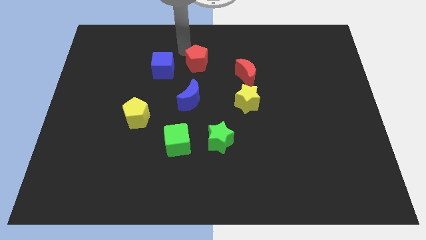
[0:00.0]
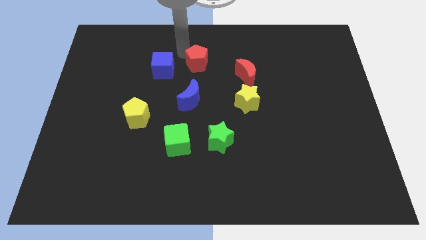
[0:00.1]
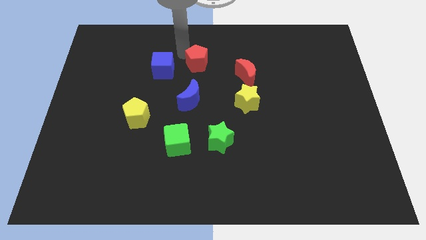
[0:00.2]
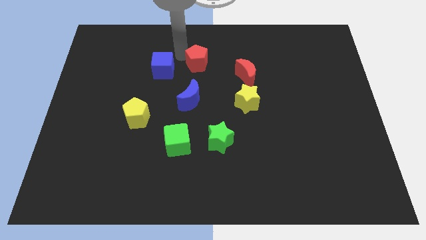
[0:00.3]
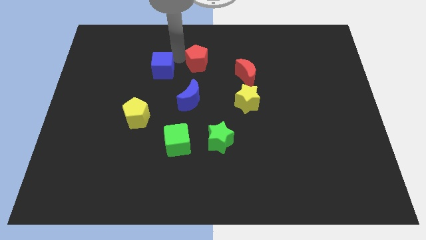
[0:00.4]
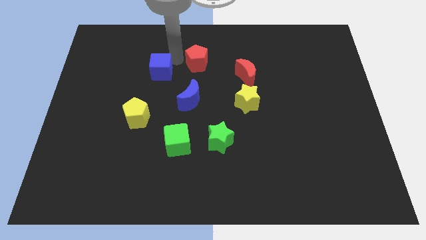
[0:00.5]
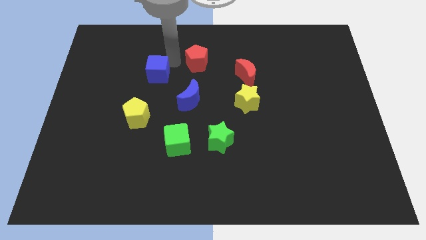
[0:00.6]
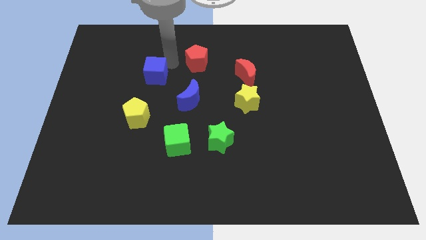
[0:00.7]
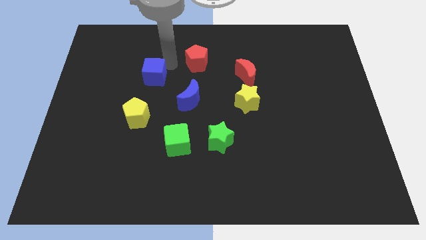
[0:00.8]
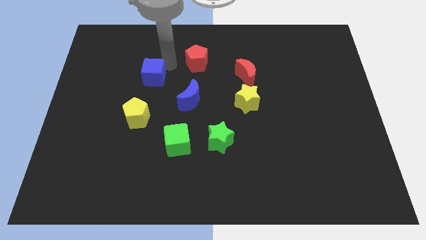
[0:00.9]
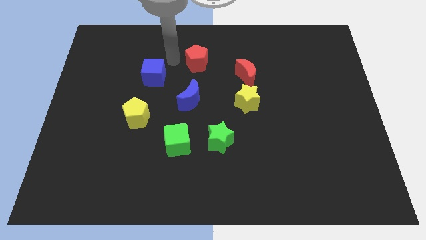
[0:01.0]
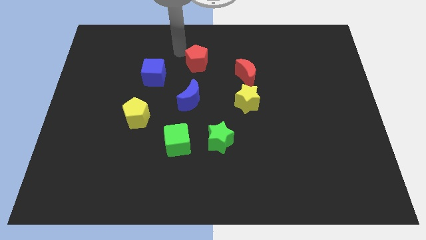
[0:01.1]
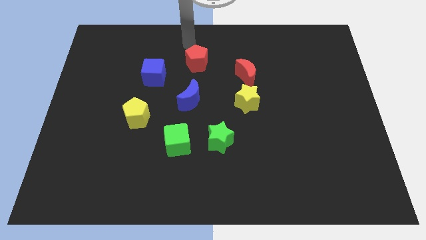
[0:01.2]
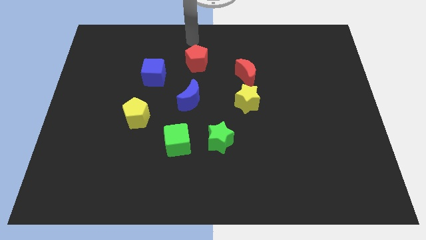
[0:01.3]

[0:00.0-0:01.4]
move the blue cube slightly towards the yellow pentagon

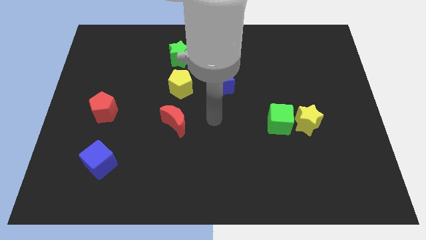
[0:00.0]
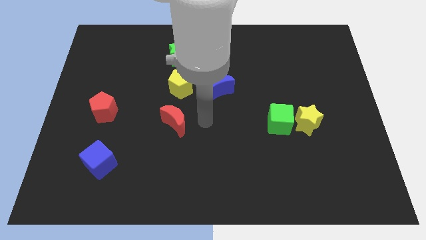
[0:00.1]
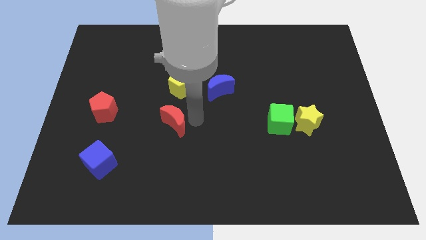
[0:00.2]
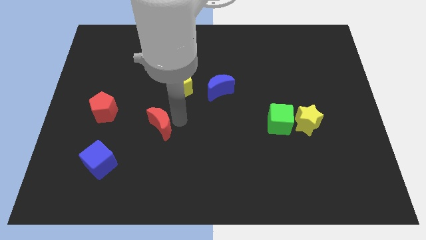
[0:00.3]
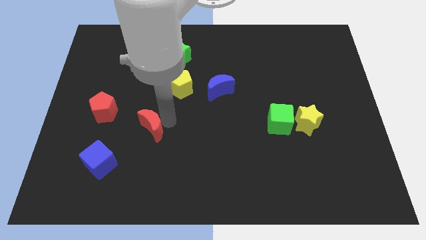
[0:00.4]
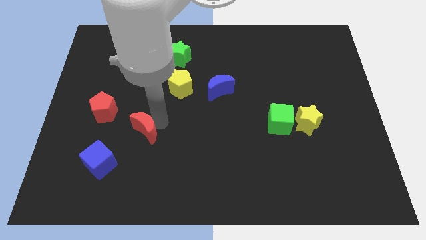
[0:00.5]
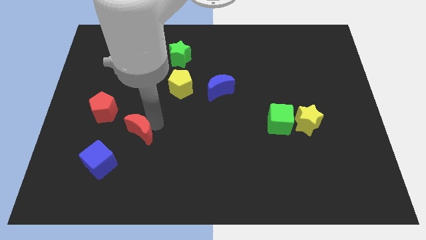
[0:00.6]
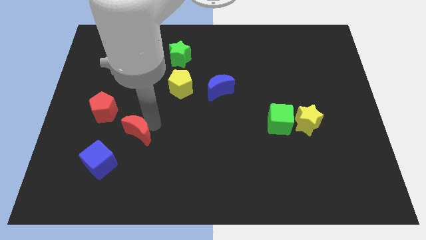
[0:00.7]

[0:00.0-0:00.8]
push the red crescent towards the blue cube

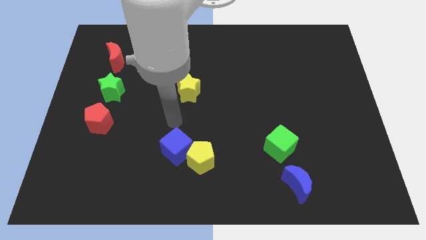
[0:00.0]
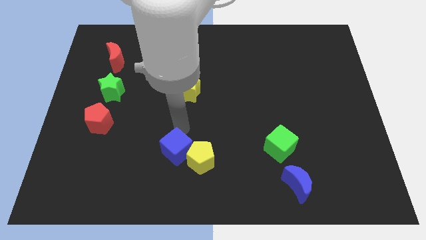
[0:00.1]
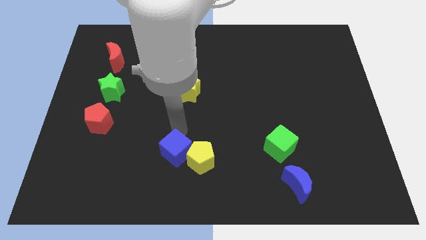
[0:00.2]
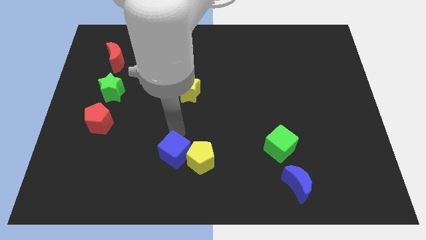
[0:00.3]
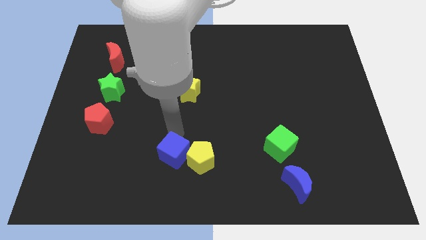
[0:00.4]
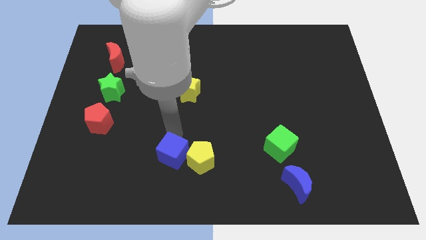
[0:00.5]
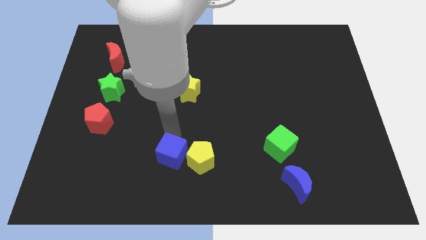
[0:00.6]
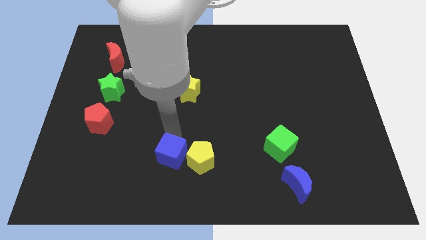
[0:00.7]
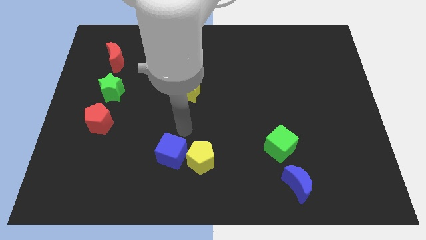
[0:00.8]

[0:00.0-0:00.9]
move the blue cube slightly

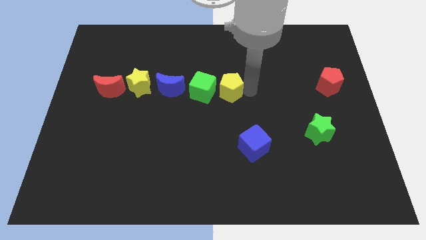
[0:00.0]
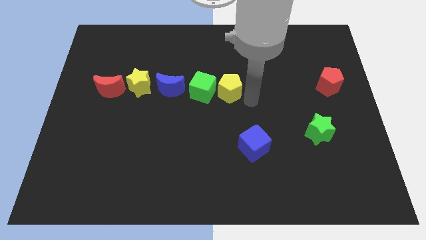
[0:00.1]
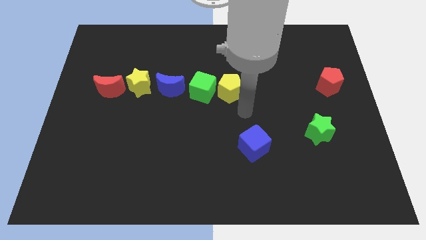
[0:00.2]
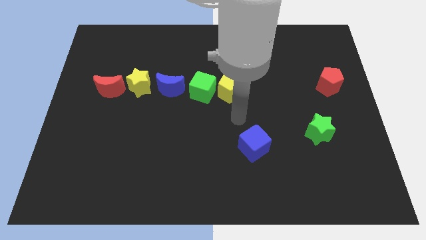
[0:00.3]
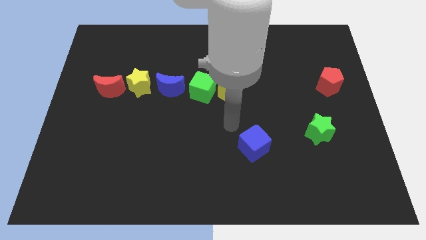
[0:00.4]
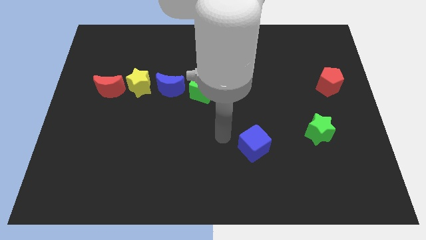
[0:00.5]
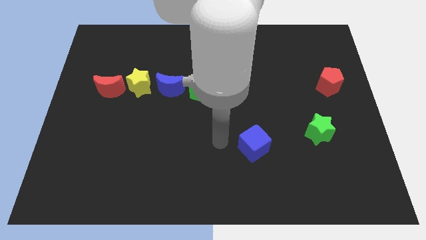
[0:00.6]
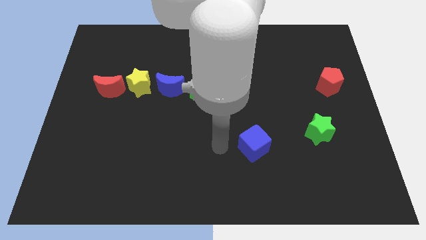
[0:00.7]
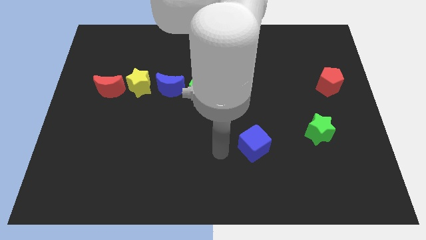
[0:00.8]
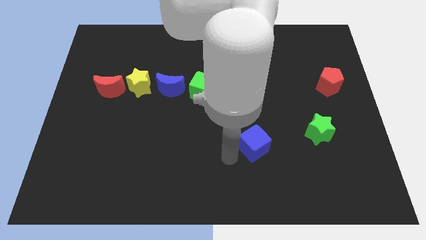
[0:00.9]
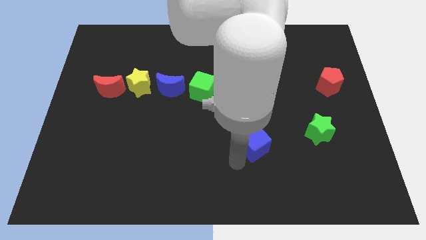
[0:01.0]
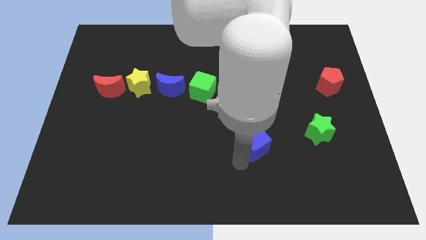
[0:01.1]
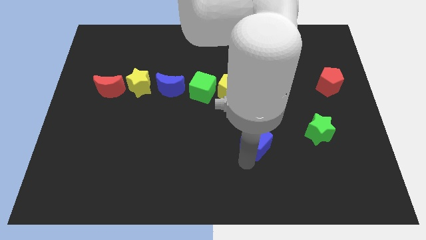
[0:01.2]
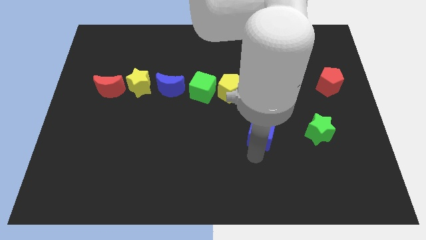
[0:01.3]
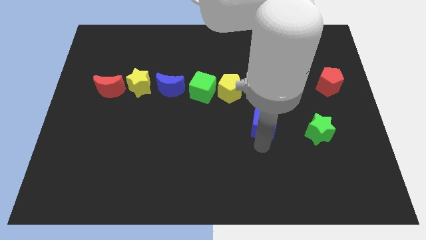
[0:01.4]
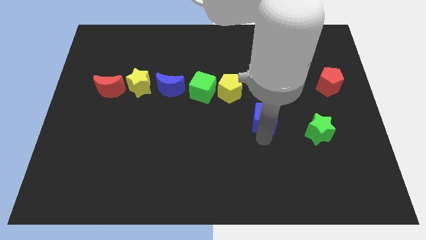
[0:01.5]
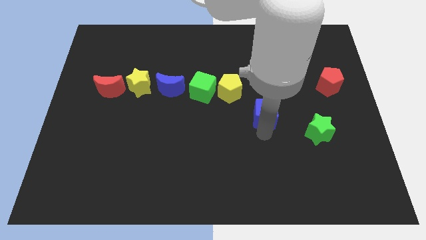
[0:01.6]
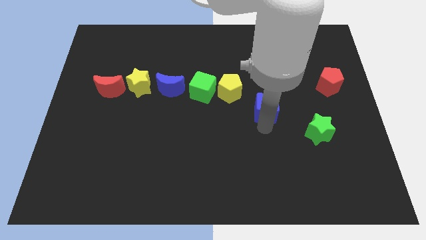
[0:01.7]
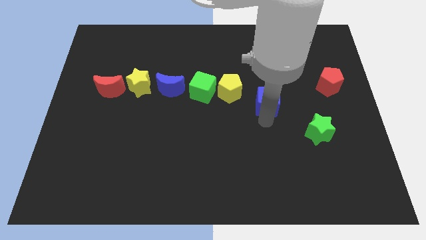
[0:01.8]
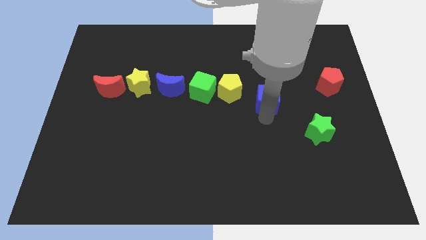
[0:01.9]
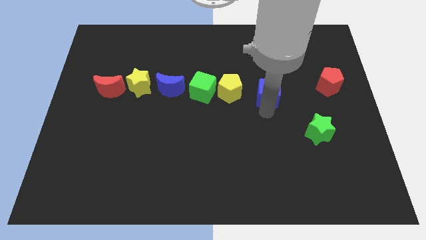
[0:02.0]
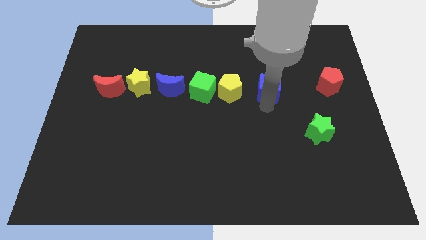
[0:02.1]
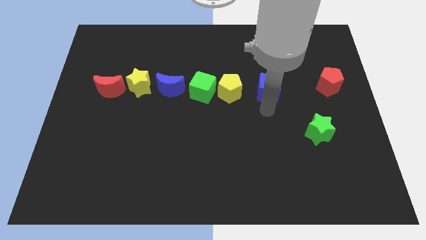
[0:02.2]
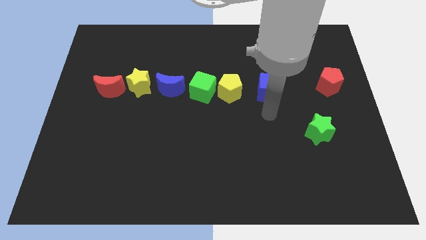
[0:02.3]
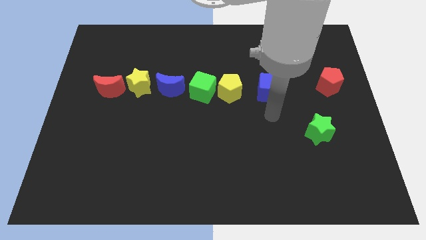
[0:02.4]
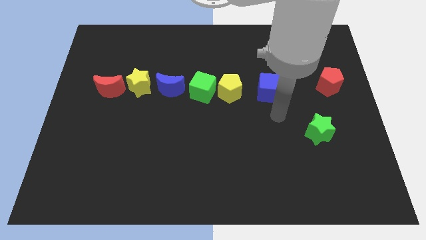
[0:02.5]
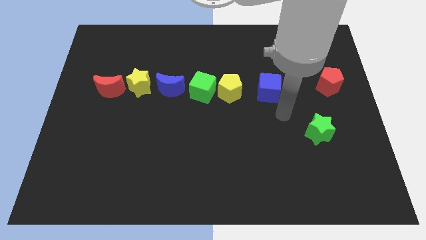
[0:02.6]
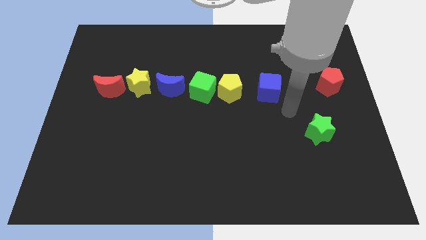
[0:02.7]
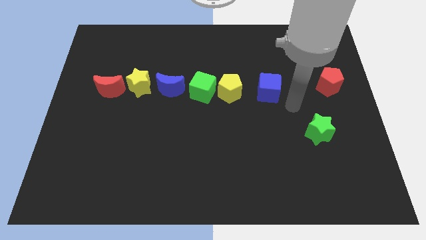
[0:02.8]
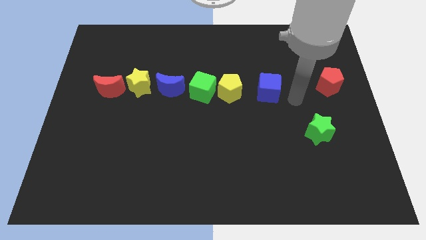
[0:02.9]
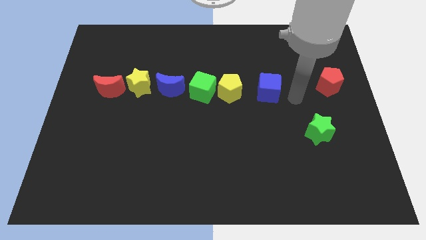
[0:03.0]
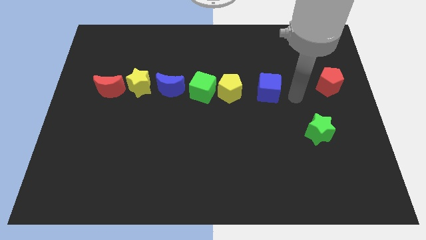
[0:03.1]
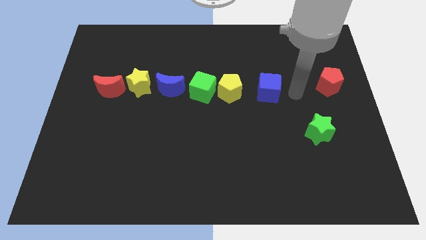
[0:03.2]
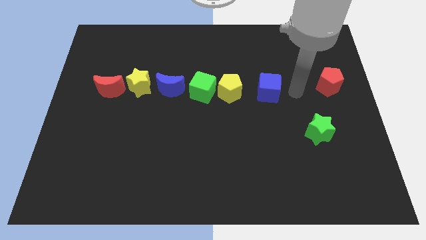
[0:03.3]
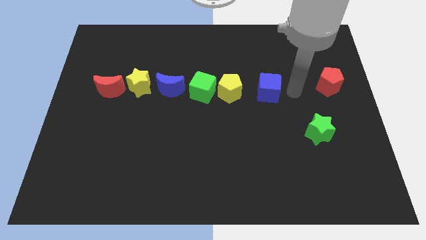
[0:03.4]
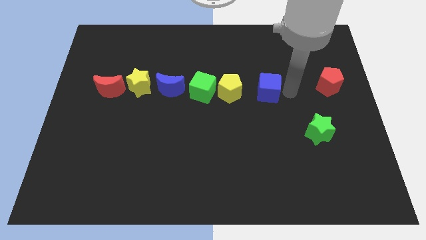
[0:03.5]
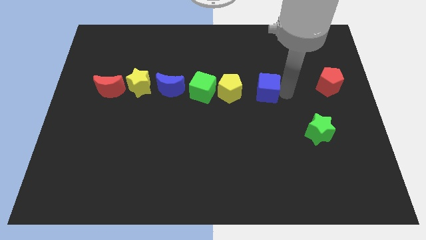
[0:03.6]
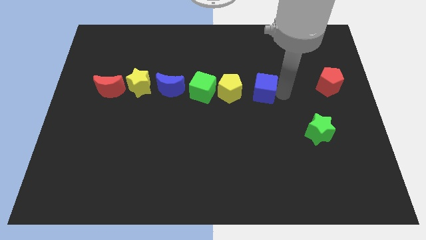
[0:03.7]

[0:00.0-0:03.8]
place blue cube to the left of red pentagon

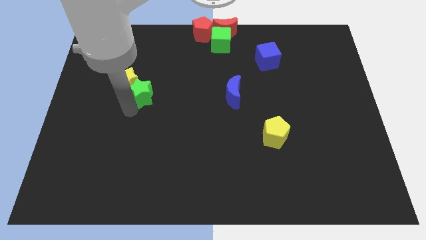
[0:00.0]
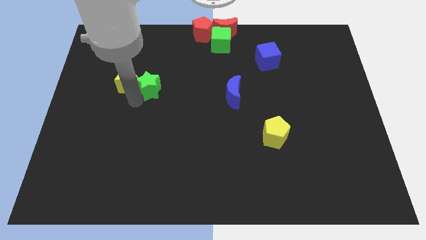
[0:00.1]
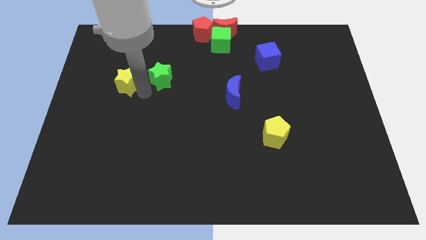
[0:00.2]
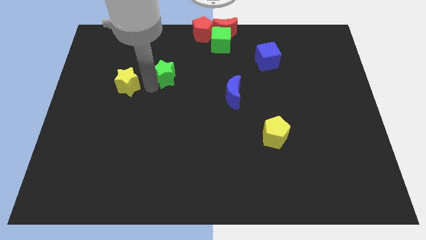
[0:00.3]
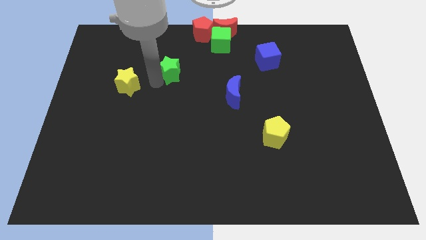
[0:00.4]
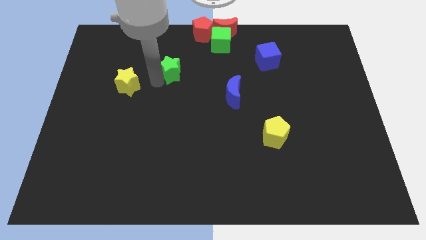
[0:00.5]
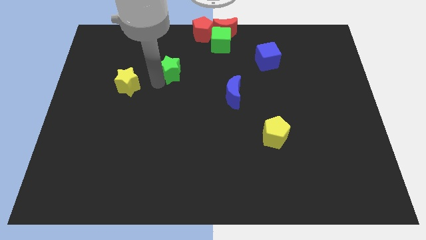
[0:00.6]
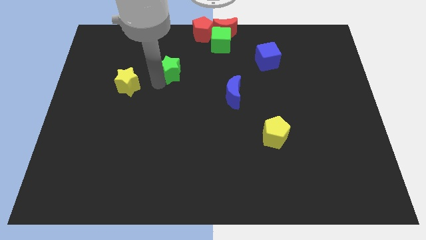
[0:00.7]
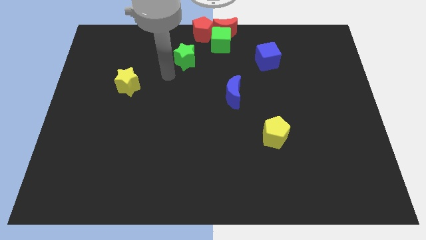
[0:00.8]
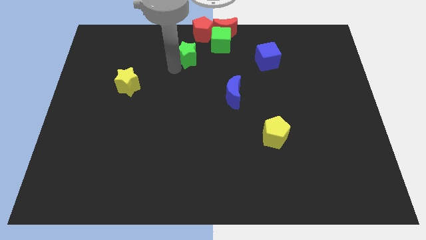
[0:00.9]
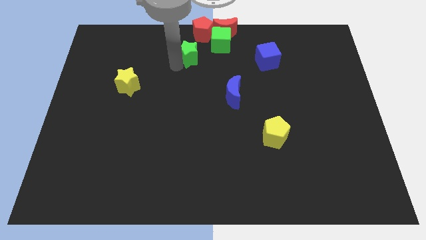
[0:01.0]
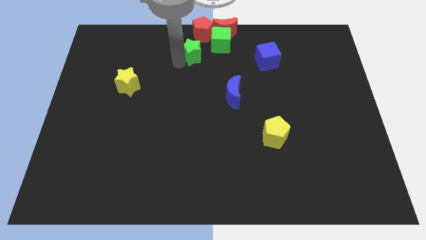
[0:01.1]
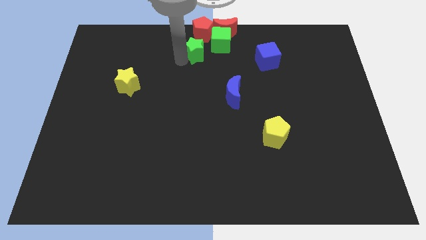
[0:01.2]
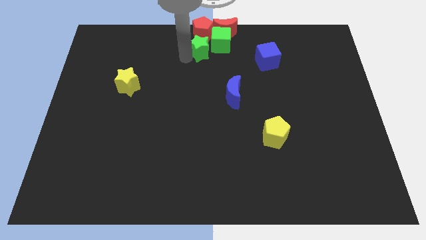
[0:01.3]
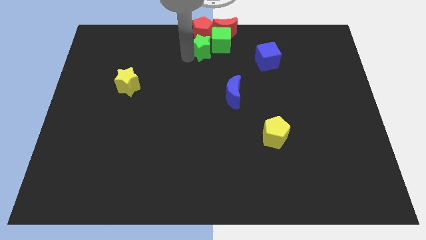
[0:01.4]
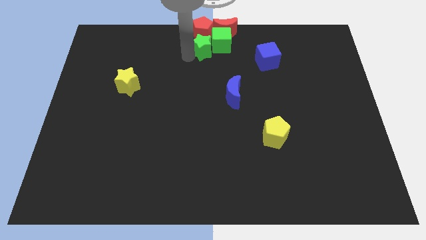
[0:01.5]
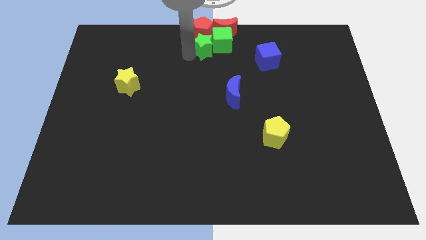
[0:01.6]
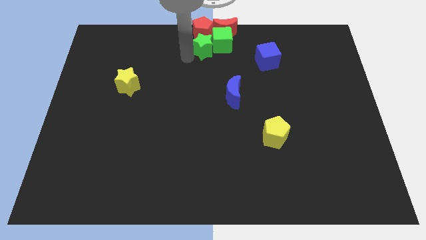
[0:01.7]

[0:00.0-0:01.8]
push the green star towards the top center of the board

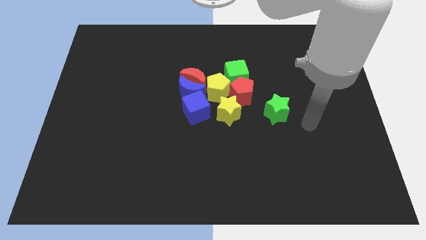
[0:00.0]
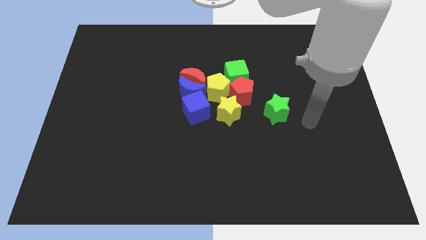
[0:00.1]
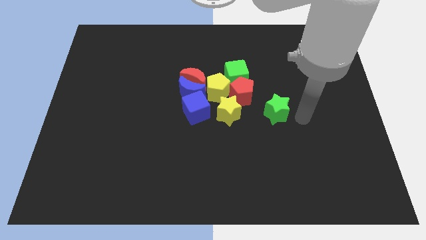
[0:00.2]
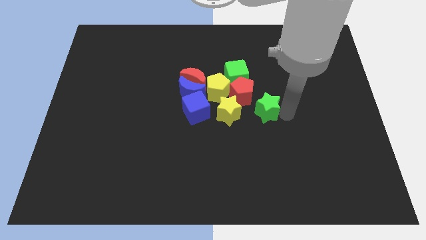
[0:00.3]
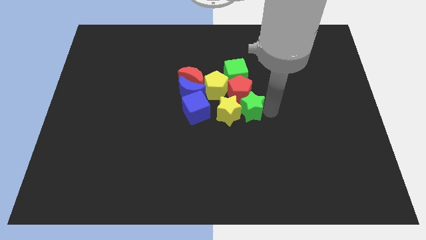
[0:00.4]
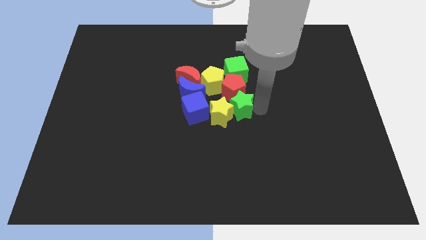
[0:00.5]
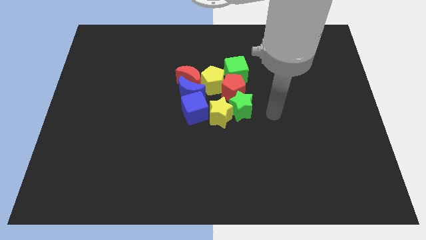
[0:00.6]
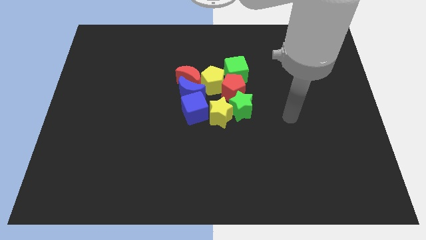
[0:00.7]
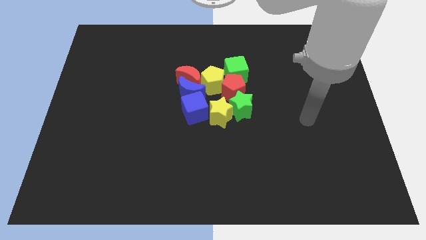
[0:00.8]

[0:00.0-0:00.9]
move the green star to the group of blocks
